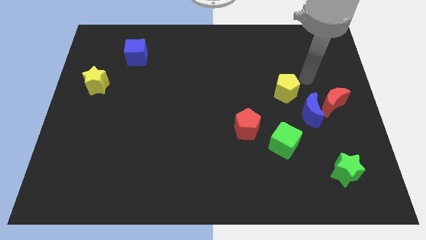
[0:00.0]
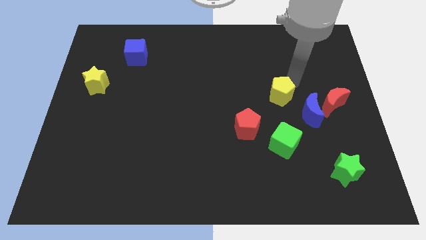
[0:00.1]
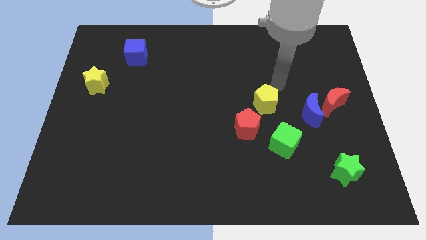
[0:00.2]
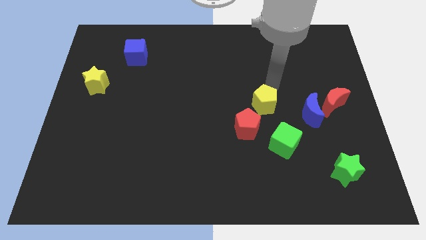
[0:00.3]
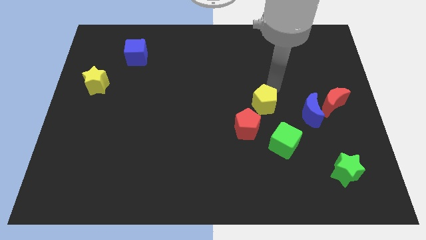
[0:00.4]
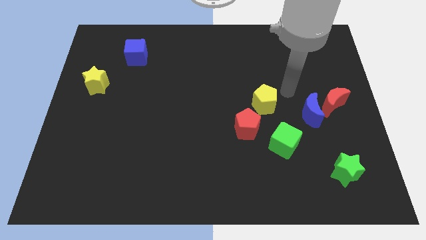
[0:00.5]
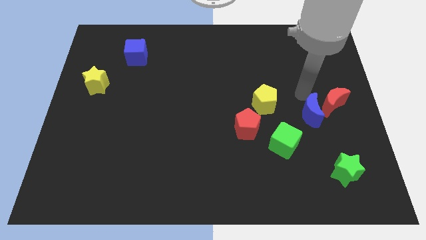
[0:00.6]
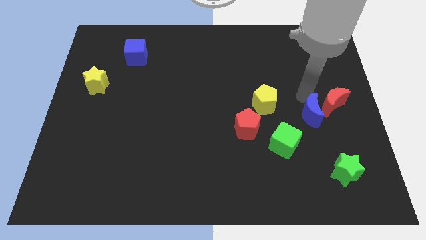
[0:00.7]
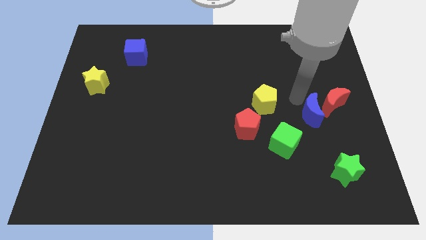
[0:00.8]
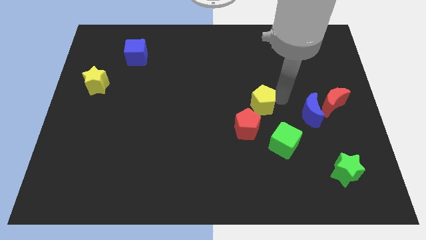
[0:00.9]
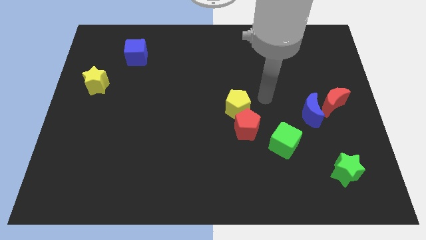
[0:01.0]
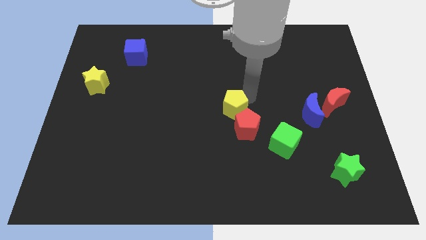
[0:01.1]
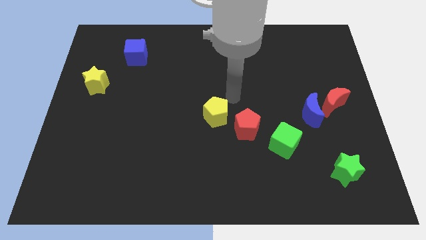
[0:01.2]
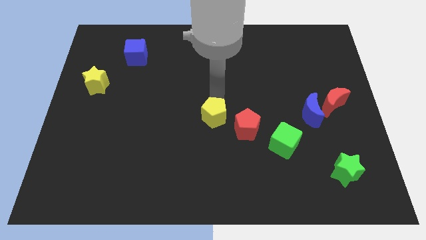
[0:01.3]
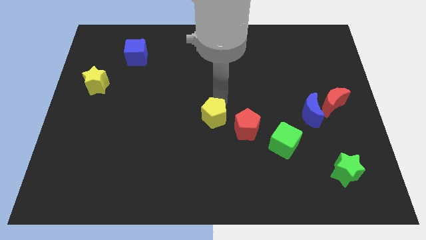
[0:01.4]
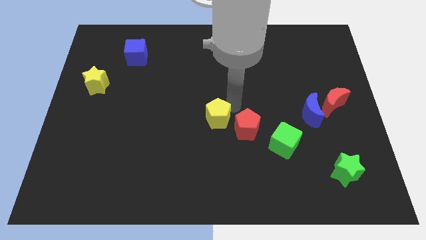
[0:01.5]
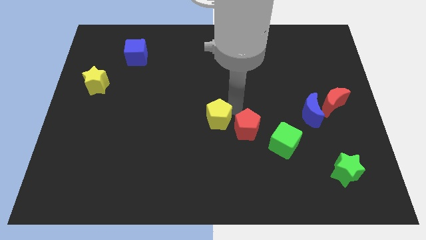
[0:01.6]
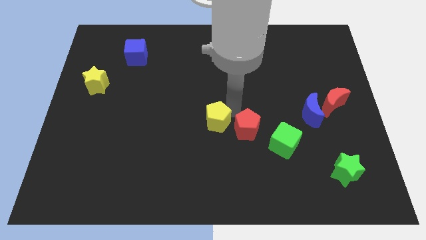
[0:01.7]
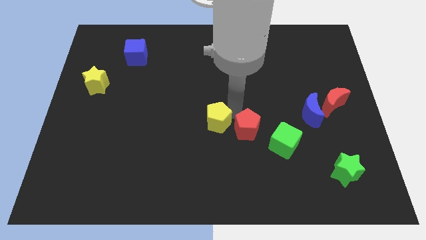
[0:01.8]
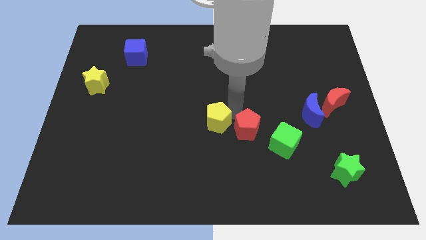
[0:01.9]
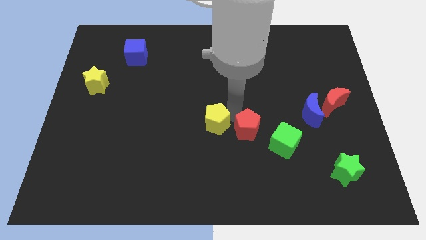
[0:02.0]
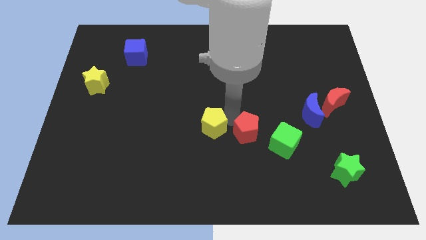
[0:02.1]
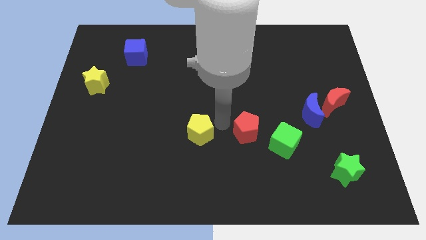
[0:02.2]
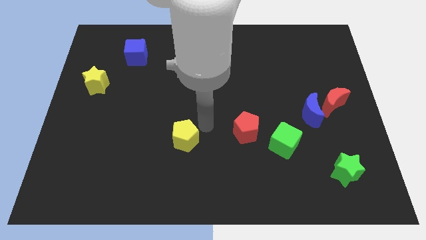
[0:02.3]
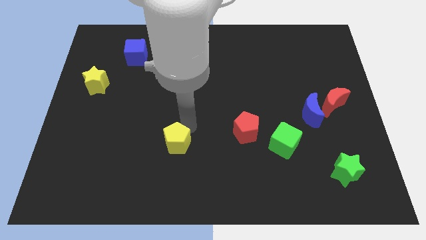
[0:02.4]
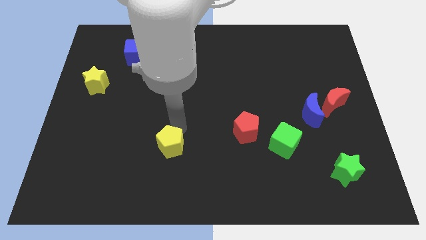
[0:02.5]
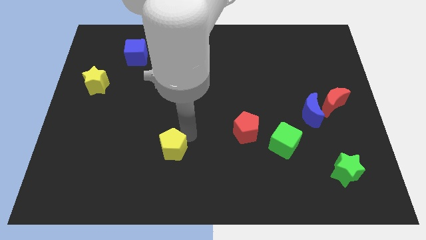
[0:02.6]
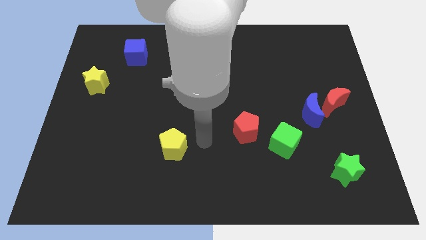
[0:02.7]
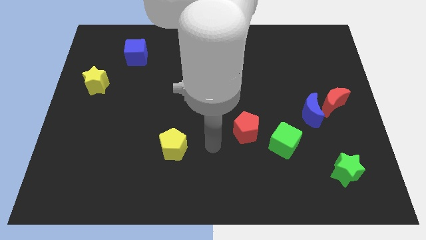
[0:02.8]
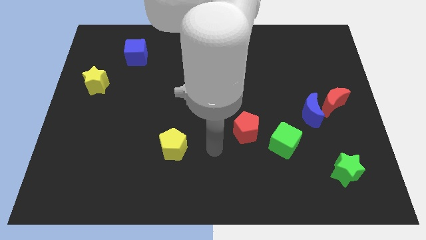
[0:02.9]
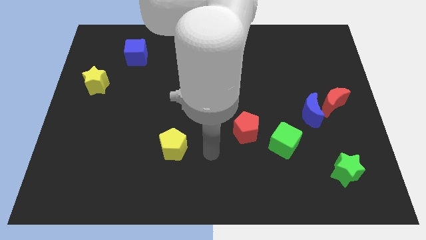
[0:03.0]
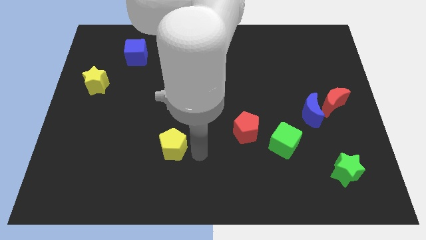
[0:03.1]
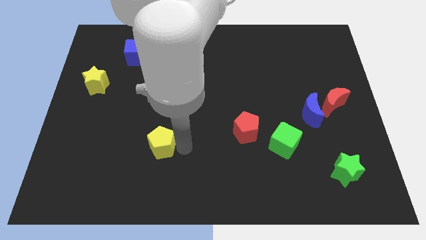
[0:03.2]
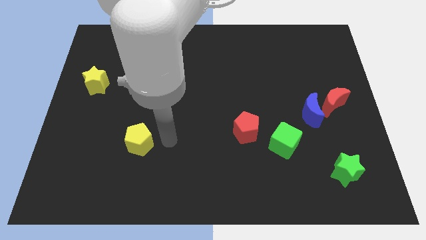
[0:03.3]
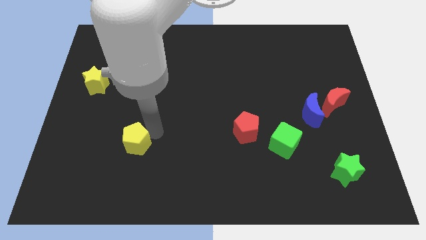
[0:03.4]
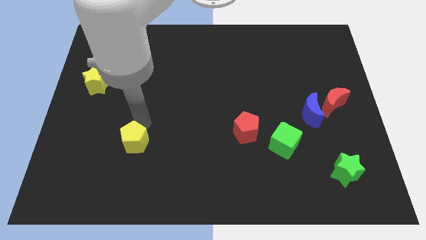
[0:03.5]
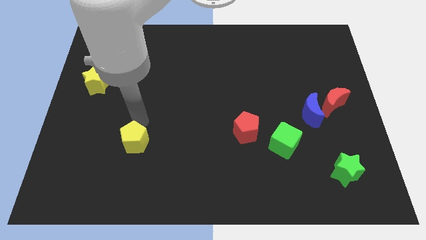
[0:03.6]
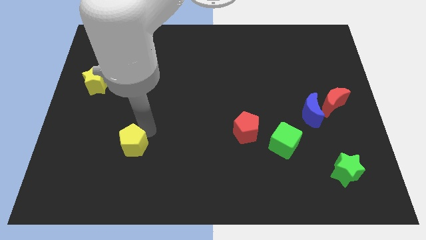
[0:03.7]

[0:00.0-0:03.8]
place the yellow pentagon vertically below the blue cube

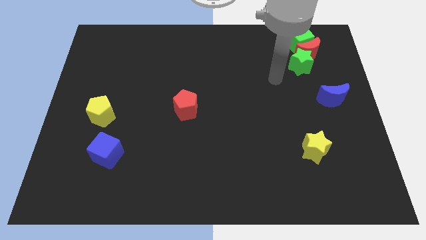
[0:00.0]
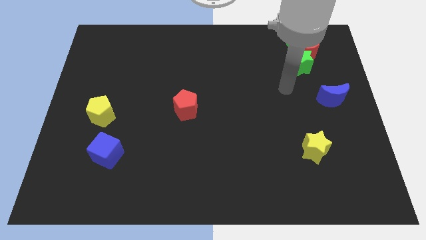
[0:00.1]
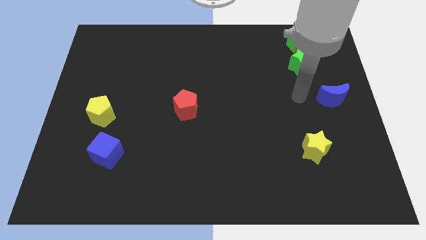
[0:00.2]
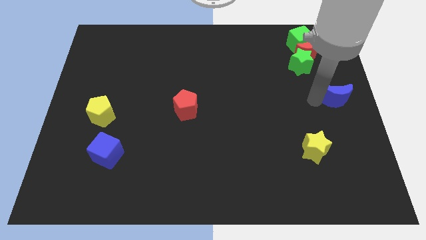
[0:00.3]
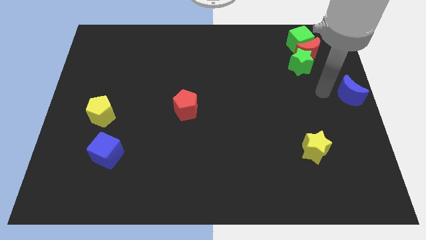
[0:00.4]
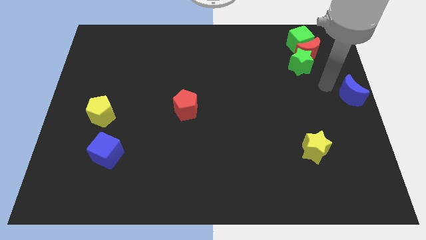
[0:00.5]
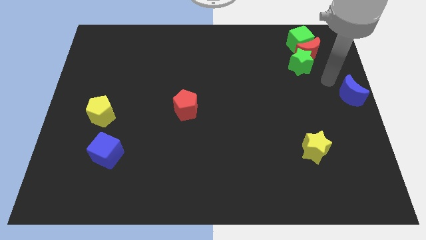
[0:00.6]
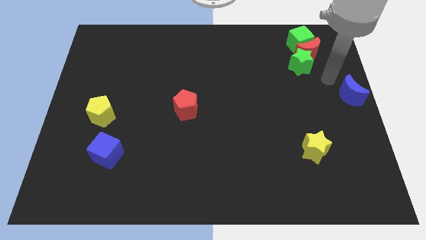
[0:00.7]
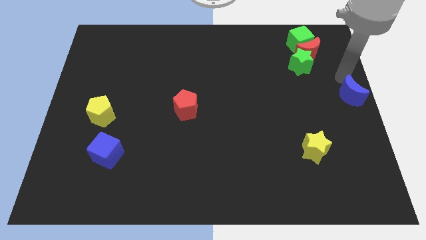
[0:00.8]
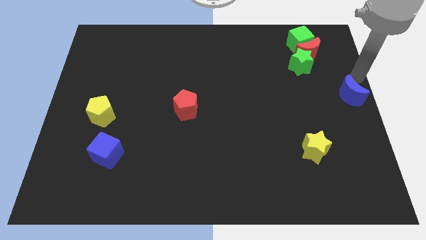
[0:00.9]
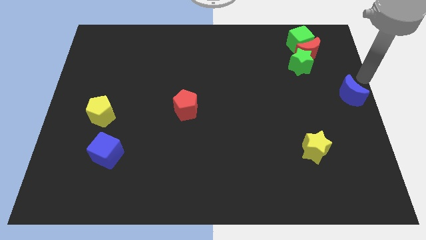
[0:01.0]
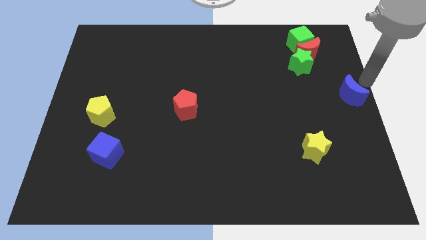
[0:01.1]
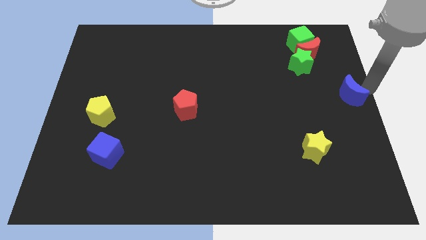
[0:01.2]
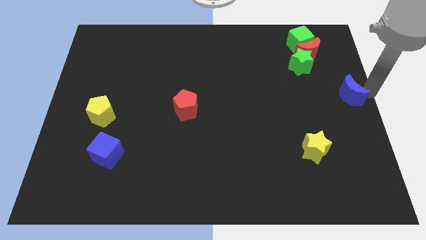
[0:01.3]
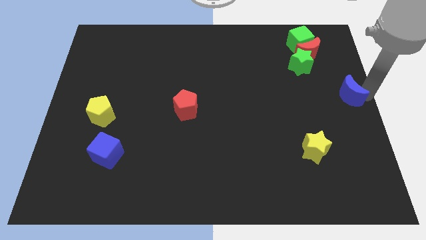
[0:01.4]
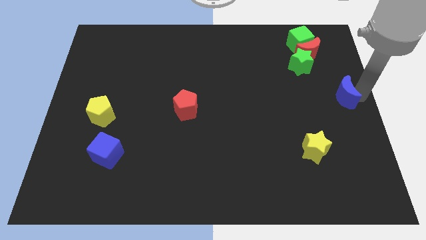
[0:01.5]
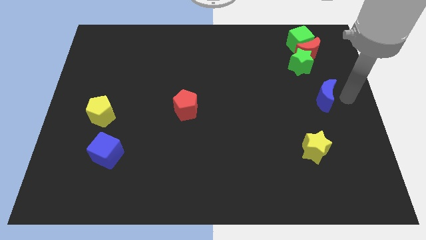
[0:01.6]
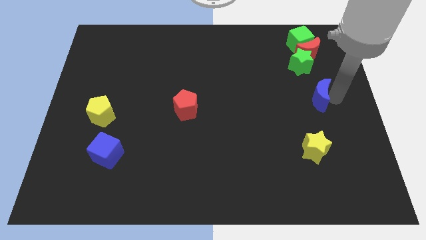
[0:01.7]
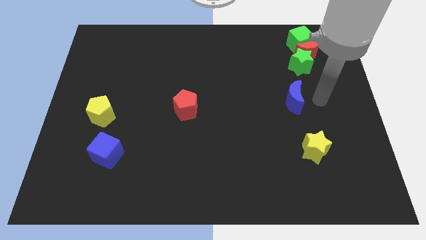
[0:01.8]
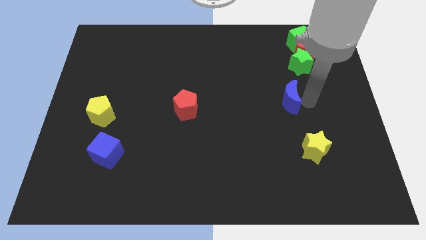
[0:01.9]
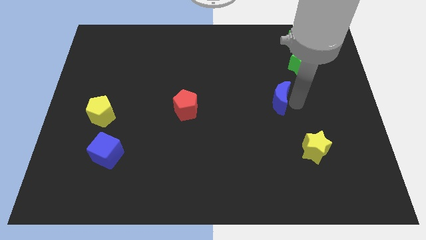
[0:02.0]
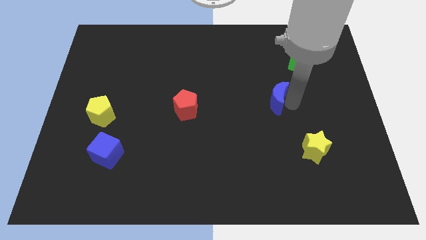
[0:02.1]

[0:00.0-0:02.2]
move the blue moon towards the center

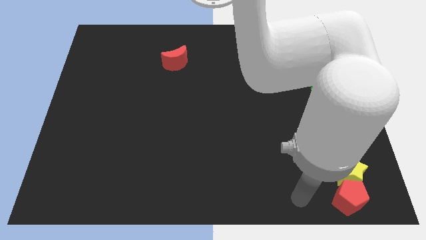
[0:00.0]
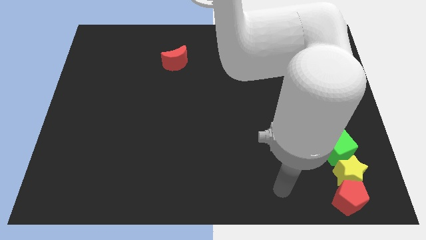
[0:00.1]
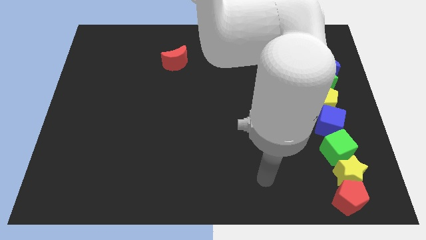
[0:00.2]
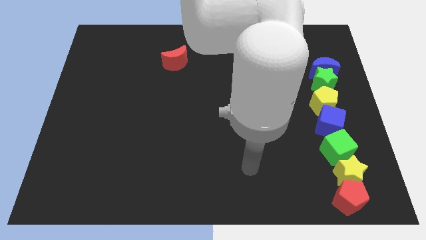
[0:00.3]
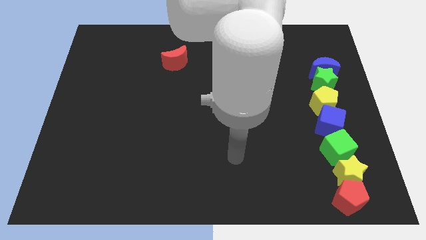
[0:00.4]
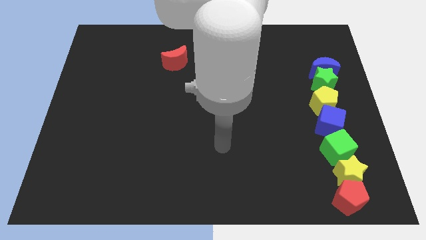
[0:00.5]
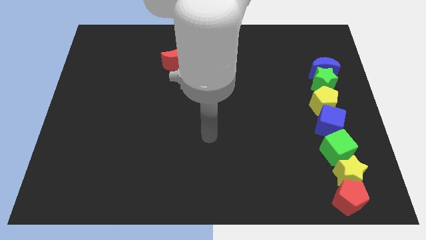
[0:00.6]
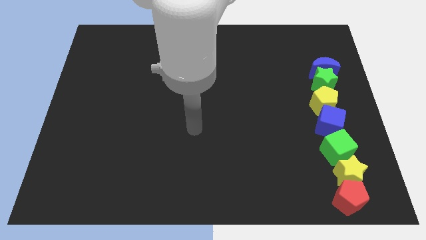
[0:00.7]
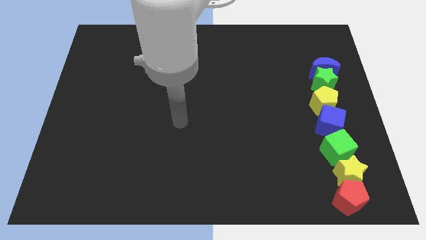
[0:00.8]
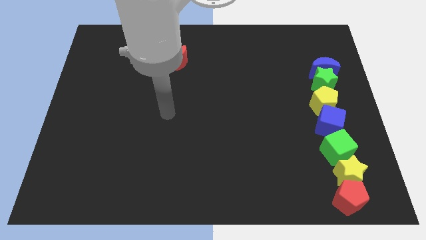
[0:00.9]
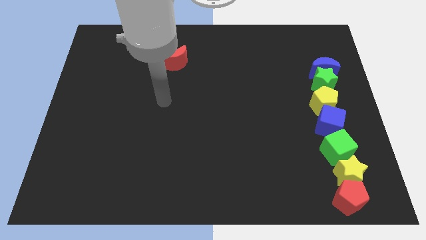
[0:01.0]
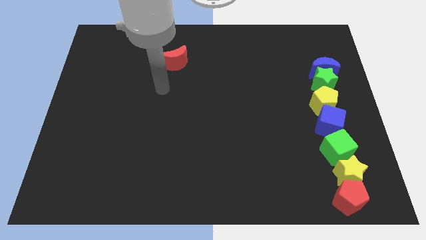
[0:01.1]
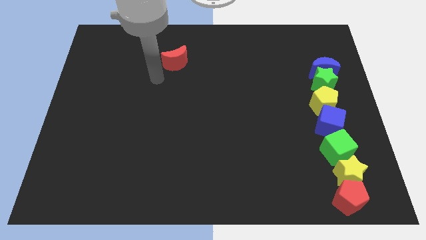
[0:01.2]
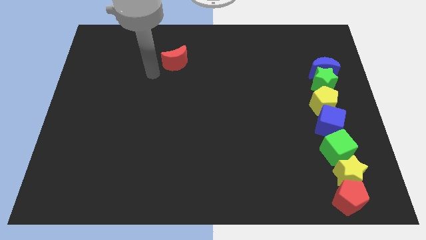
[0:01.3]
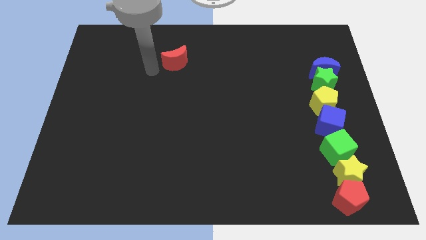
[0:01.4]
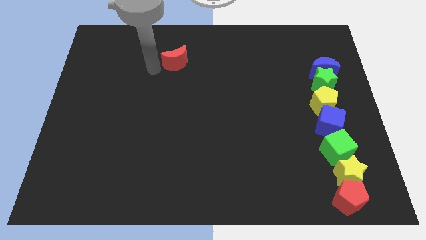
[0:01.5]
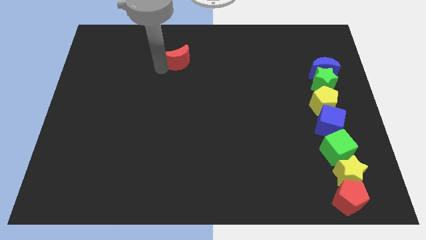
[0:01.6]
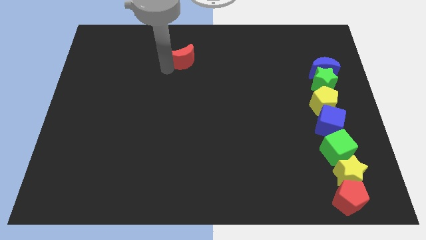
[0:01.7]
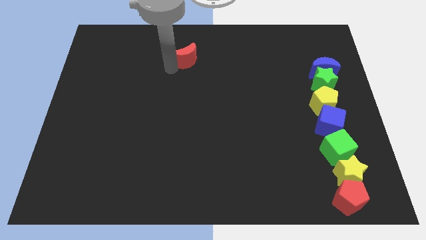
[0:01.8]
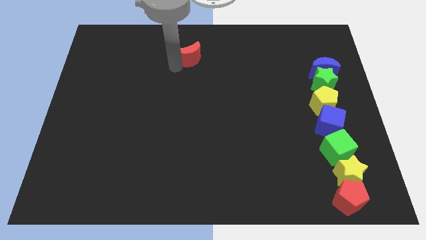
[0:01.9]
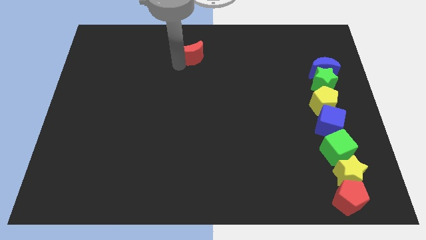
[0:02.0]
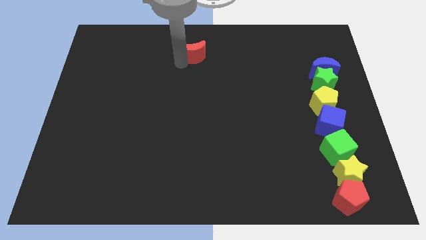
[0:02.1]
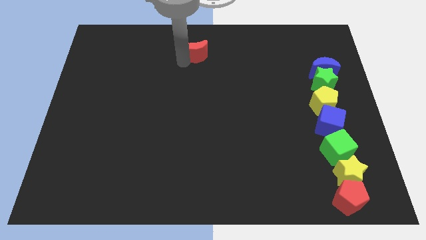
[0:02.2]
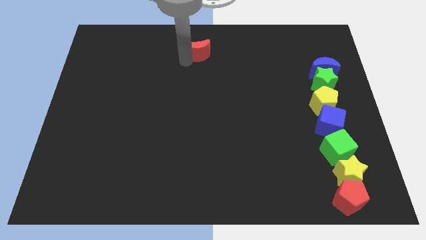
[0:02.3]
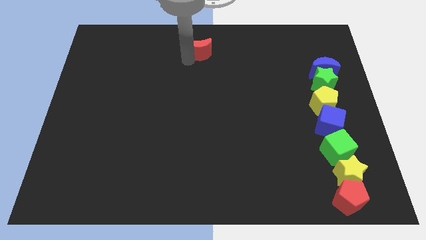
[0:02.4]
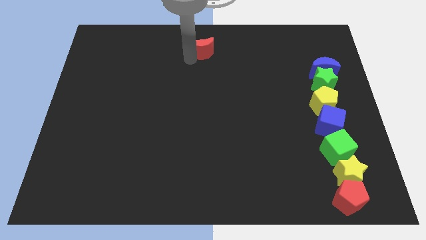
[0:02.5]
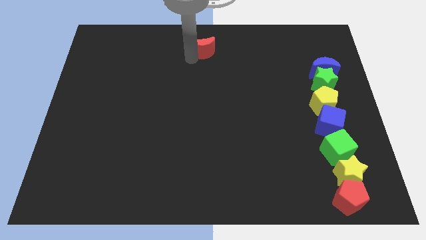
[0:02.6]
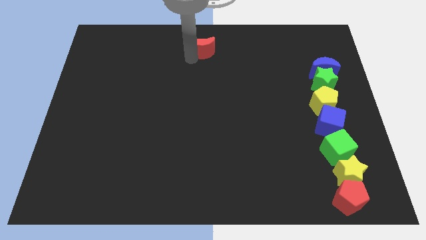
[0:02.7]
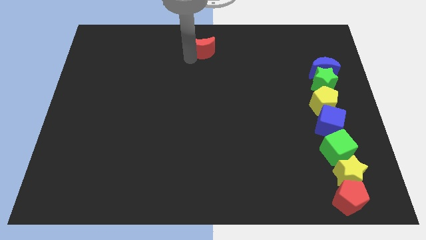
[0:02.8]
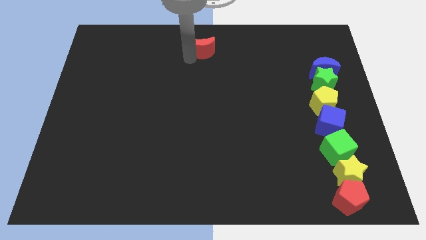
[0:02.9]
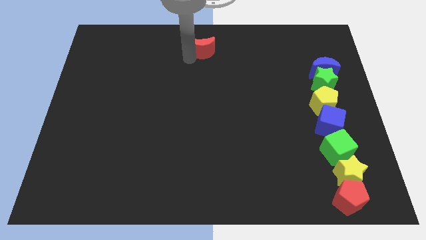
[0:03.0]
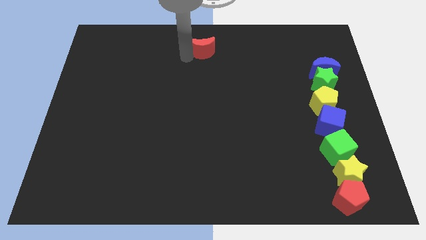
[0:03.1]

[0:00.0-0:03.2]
move the red crescent to the top center of the board
